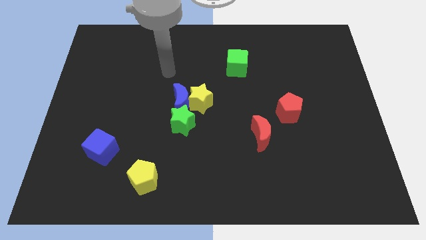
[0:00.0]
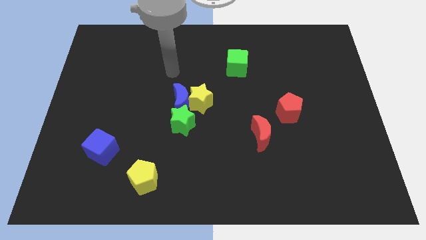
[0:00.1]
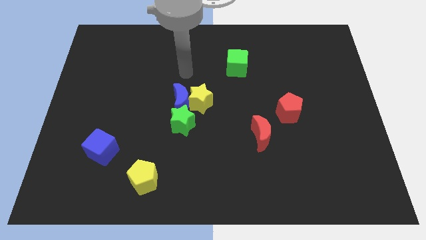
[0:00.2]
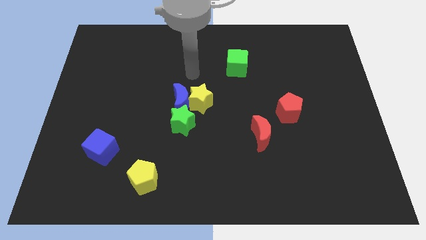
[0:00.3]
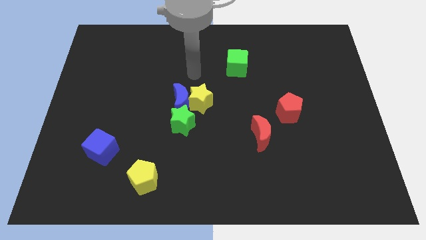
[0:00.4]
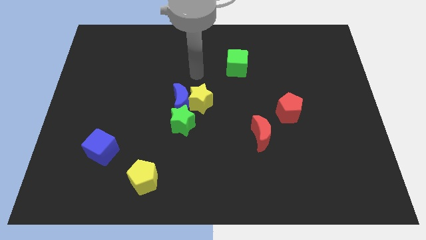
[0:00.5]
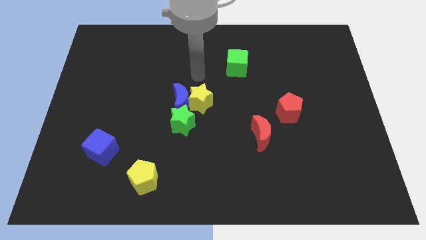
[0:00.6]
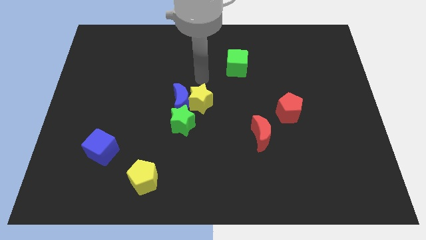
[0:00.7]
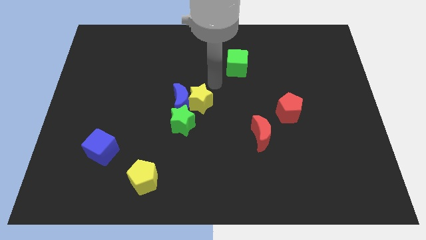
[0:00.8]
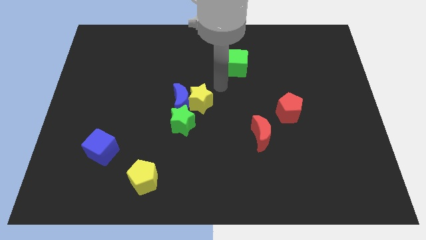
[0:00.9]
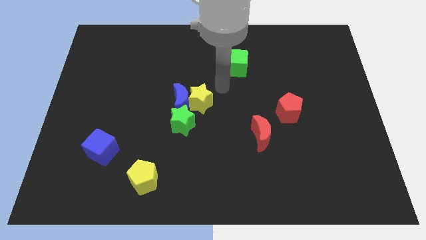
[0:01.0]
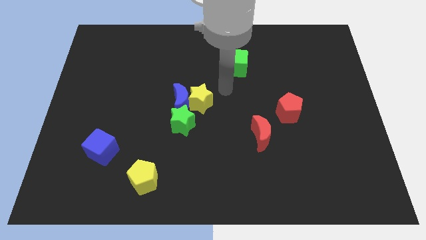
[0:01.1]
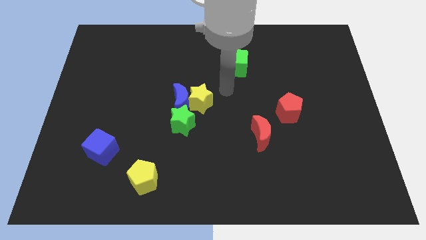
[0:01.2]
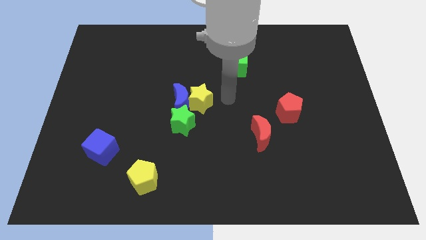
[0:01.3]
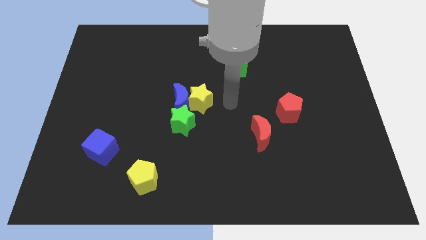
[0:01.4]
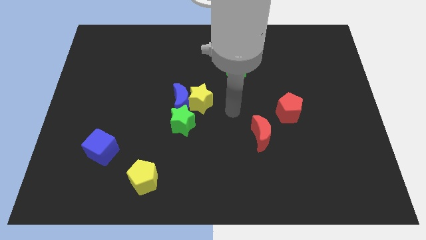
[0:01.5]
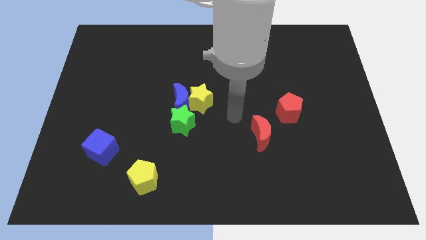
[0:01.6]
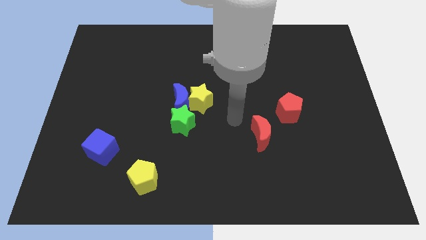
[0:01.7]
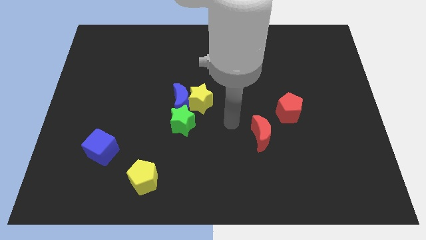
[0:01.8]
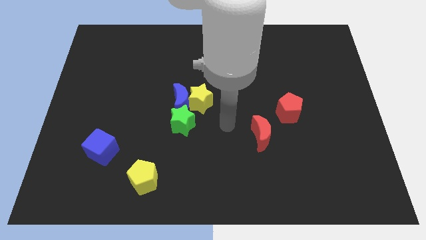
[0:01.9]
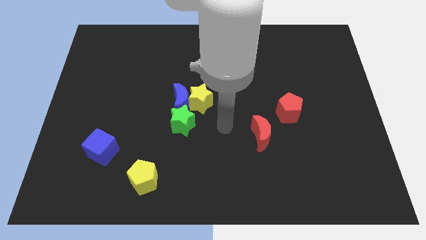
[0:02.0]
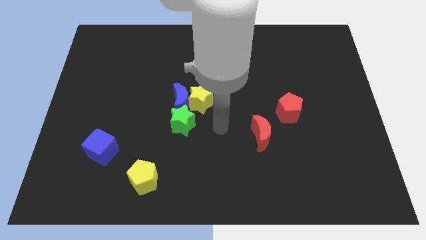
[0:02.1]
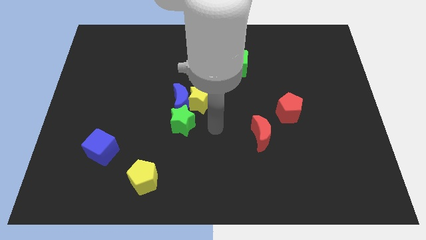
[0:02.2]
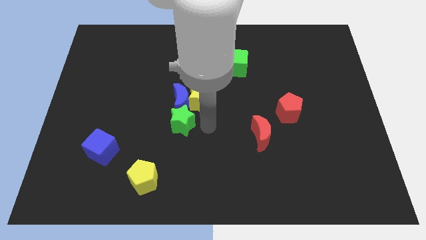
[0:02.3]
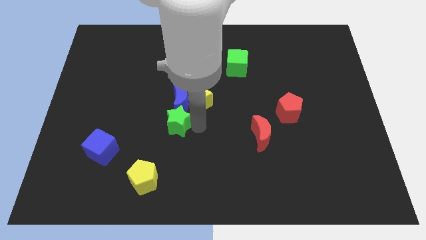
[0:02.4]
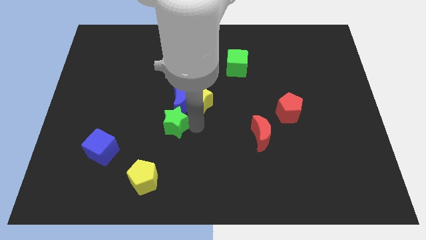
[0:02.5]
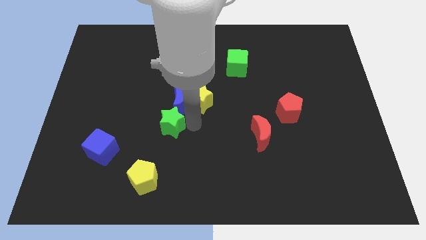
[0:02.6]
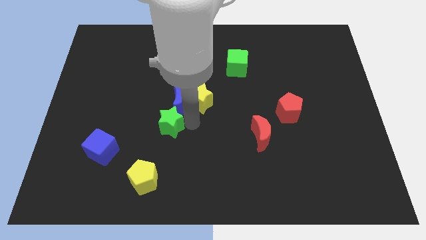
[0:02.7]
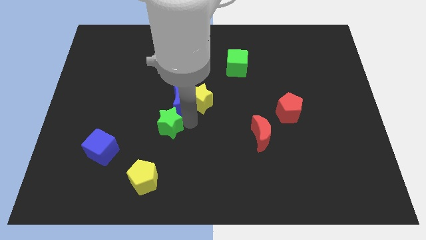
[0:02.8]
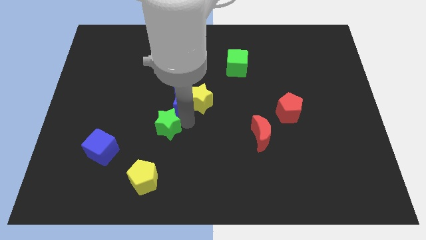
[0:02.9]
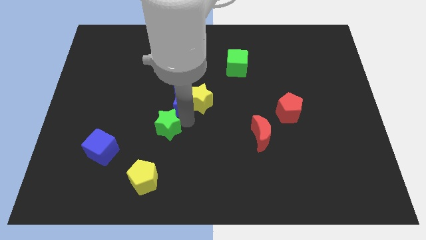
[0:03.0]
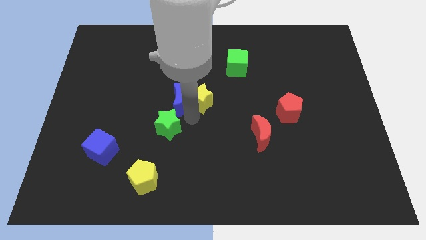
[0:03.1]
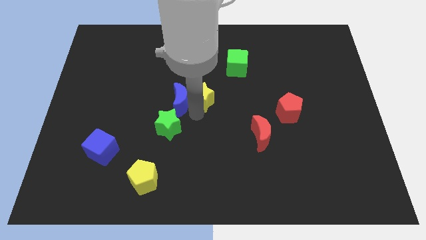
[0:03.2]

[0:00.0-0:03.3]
push the green star slightly to the left

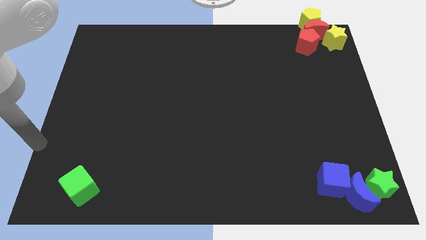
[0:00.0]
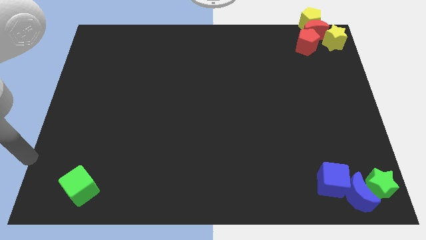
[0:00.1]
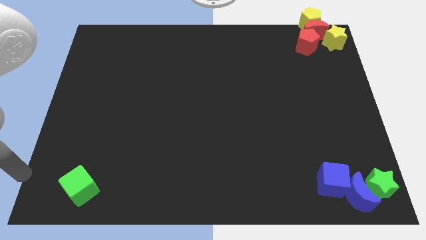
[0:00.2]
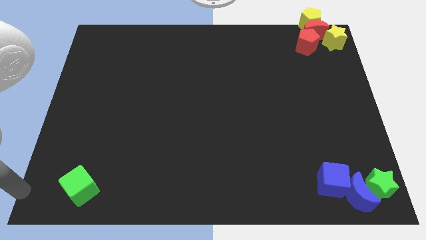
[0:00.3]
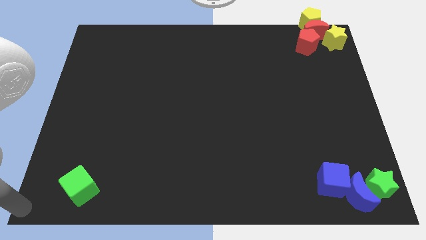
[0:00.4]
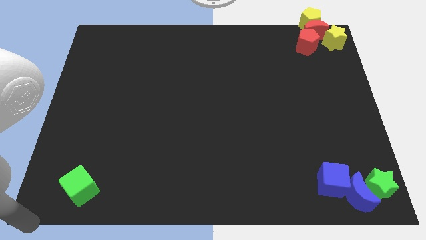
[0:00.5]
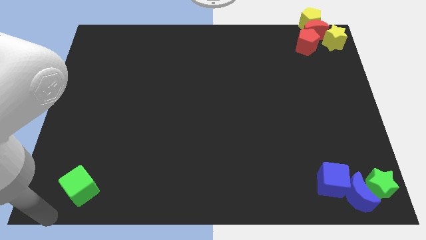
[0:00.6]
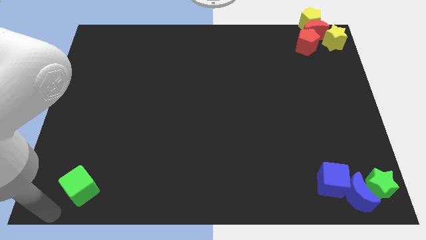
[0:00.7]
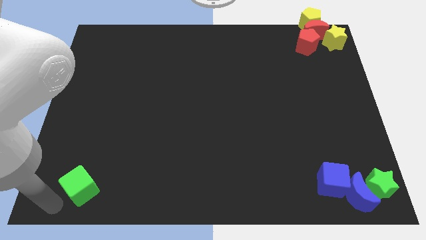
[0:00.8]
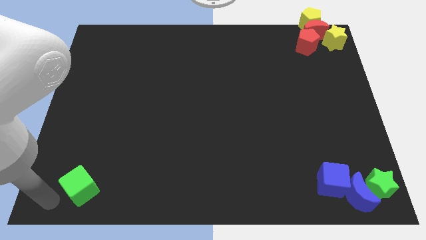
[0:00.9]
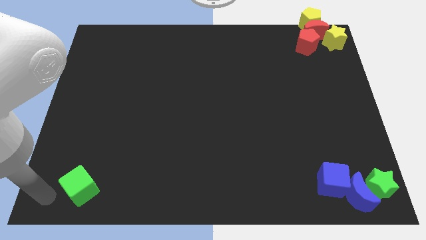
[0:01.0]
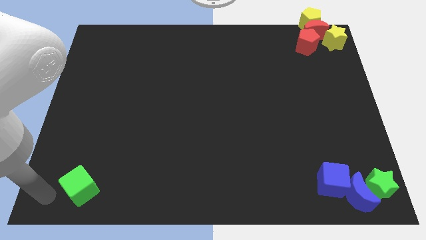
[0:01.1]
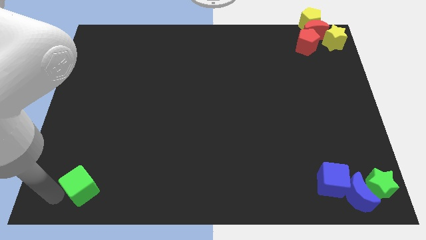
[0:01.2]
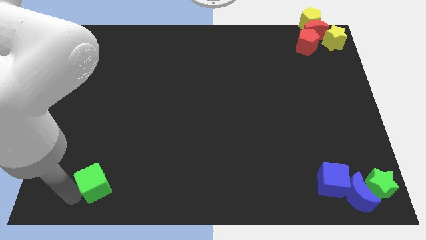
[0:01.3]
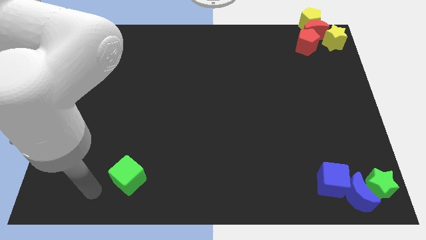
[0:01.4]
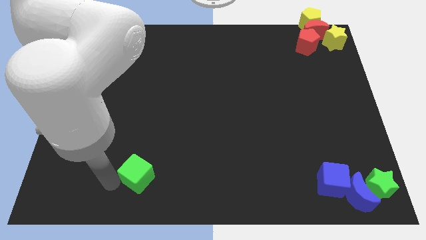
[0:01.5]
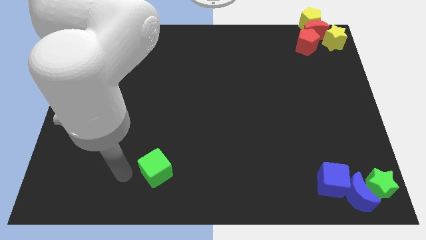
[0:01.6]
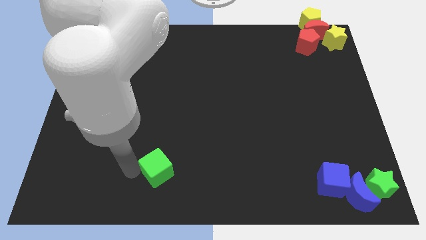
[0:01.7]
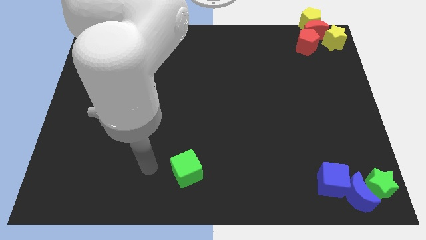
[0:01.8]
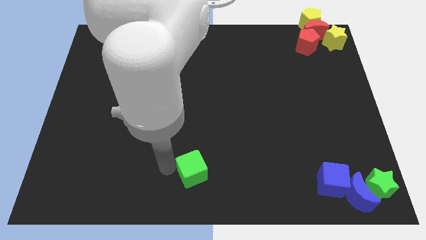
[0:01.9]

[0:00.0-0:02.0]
move the green cube to right side of the board

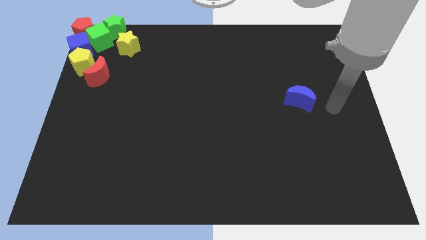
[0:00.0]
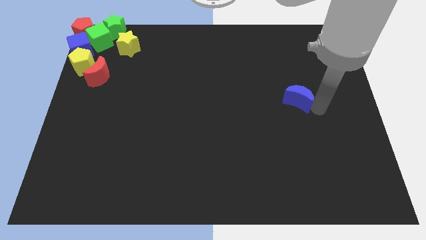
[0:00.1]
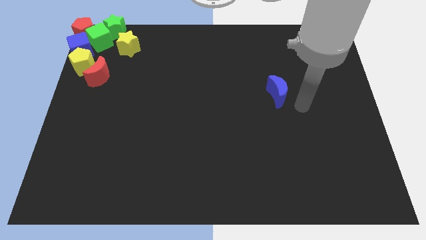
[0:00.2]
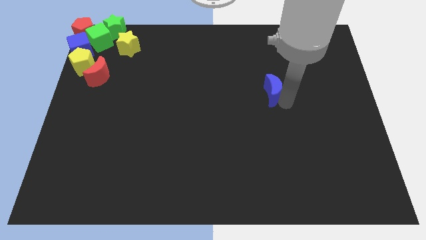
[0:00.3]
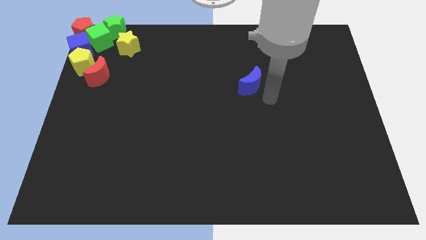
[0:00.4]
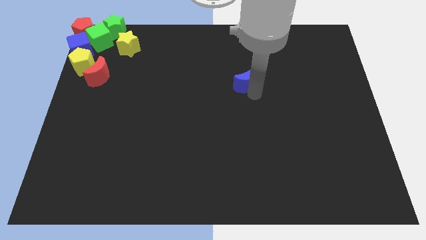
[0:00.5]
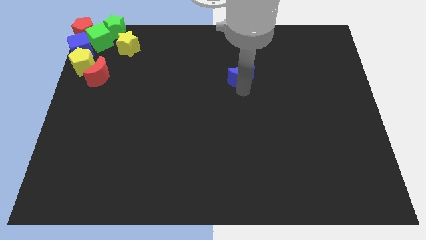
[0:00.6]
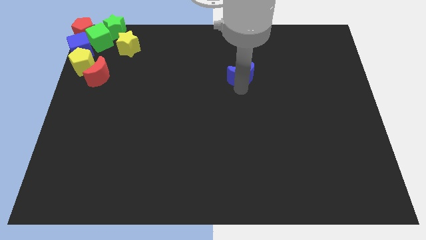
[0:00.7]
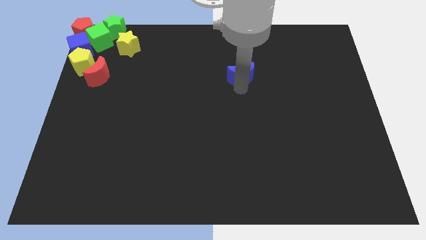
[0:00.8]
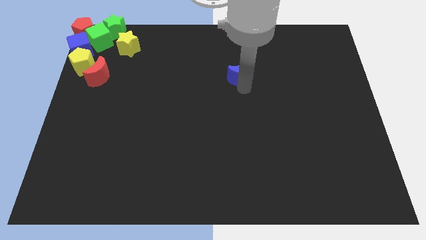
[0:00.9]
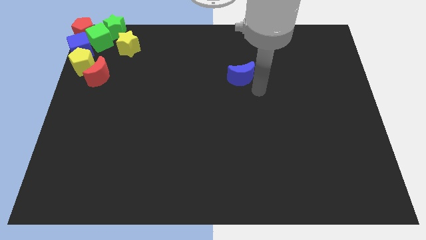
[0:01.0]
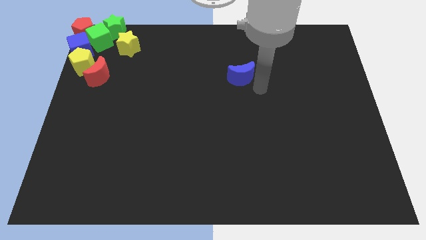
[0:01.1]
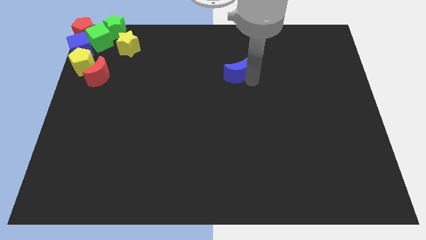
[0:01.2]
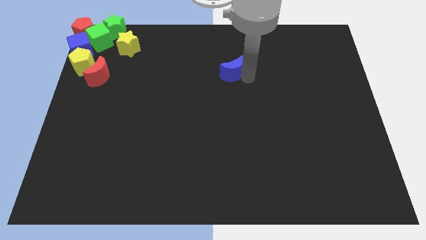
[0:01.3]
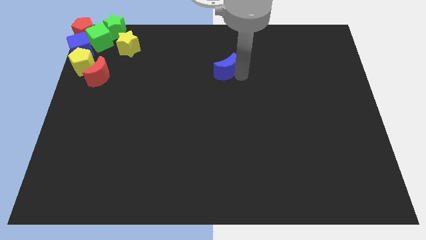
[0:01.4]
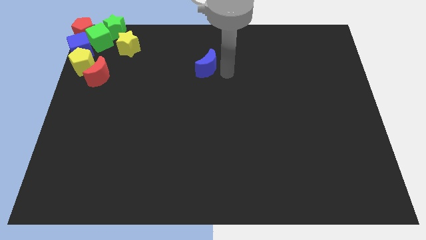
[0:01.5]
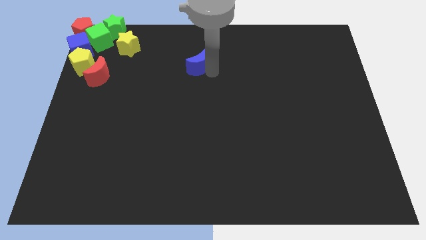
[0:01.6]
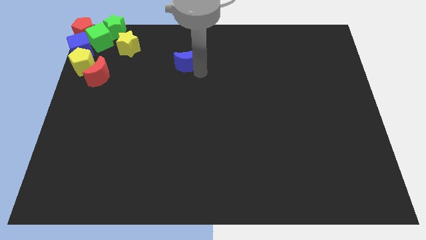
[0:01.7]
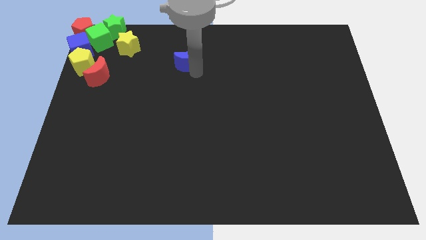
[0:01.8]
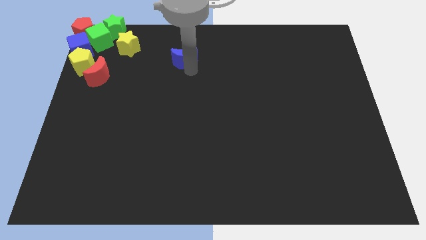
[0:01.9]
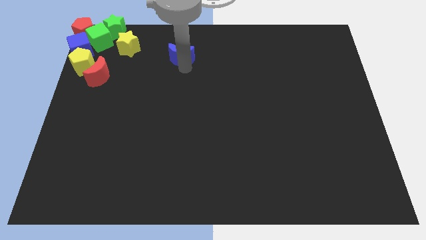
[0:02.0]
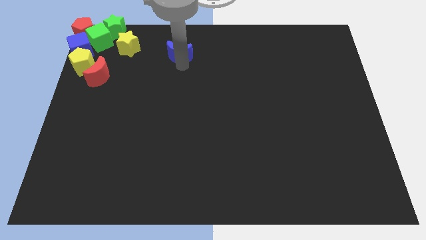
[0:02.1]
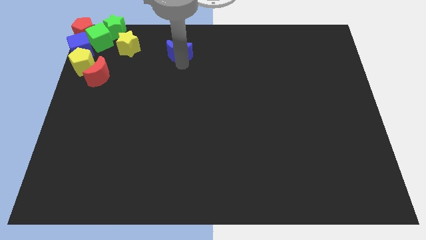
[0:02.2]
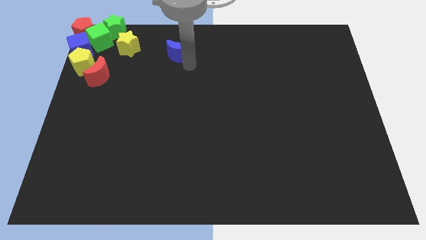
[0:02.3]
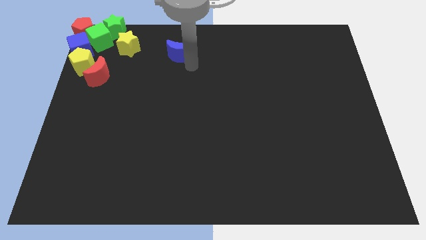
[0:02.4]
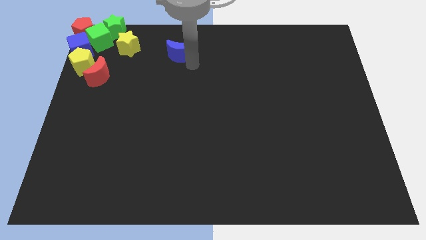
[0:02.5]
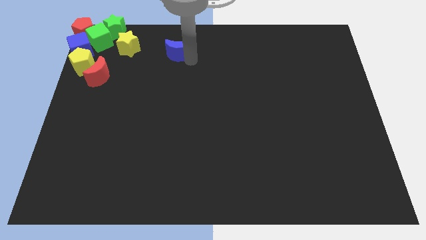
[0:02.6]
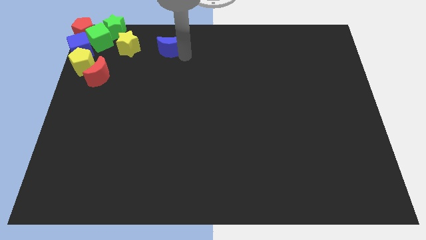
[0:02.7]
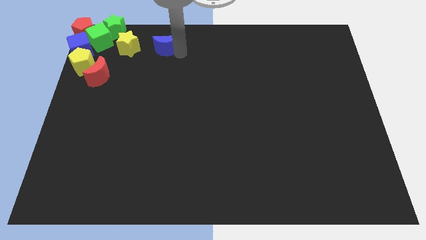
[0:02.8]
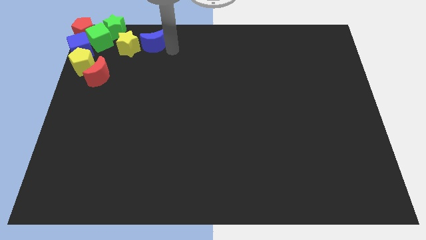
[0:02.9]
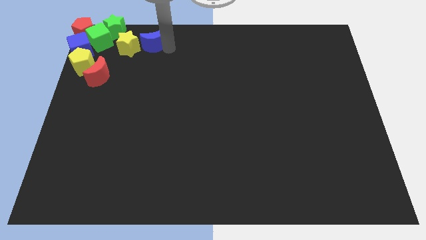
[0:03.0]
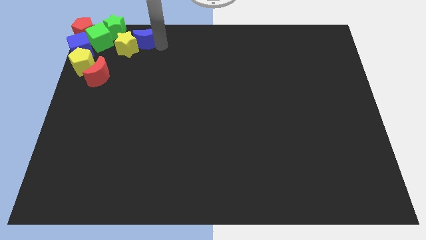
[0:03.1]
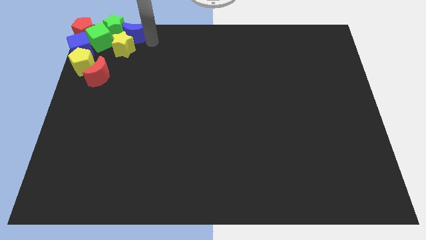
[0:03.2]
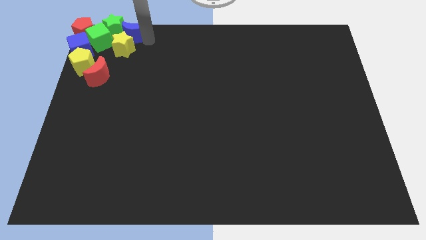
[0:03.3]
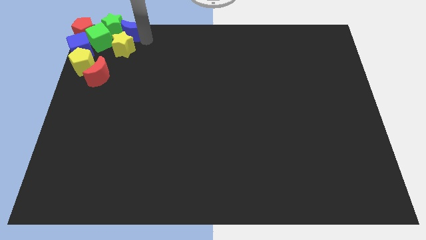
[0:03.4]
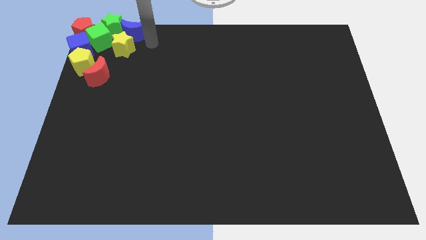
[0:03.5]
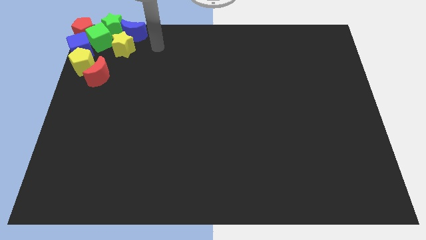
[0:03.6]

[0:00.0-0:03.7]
push the blue crescent close to the green star
